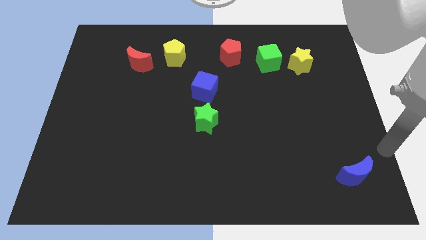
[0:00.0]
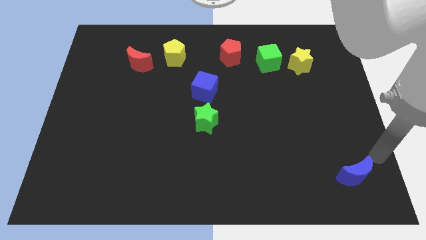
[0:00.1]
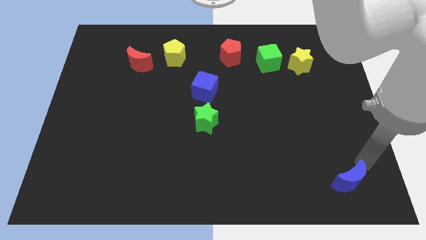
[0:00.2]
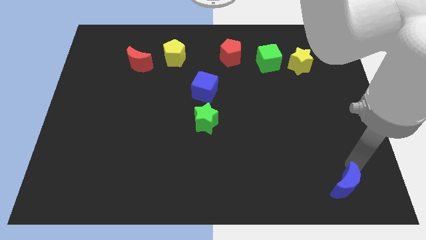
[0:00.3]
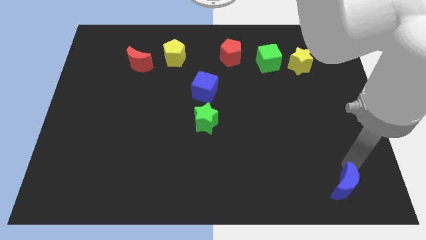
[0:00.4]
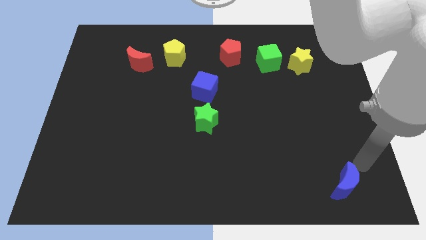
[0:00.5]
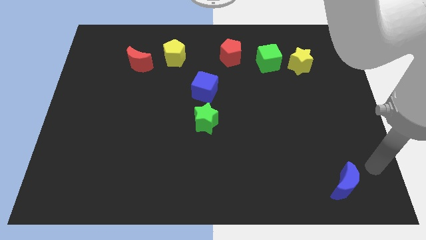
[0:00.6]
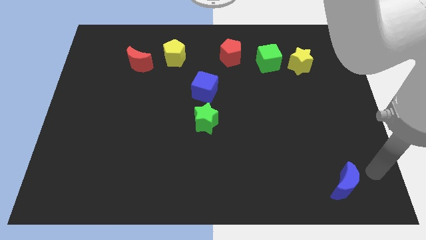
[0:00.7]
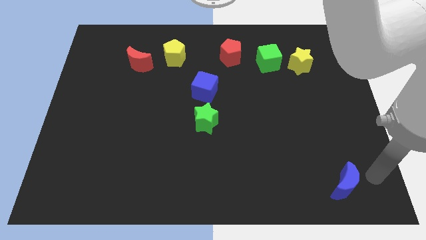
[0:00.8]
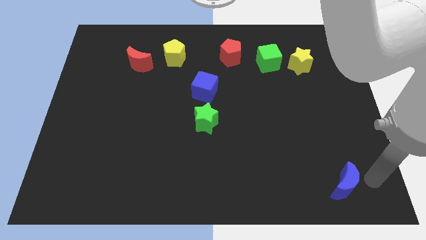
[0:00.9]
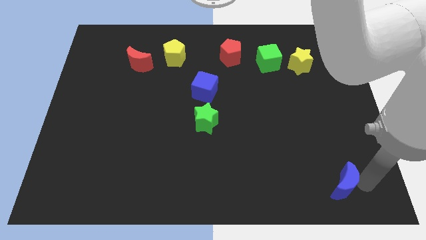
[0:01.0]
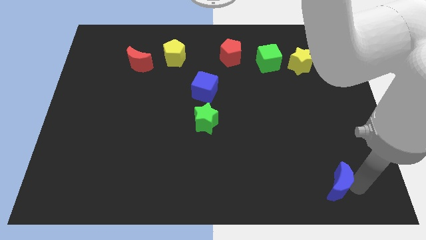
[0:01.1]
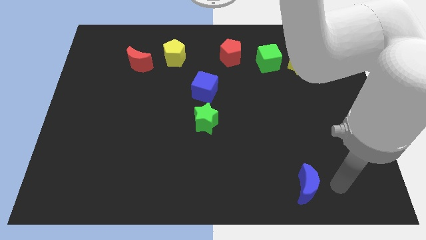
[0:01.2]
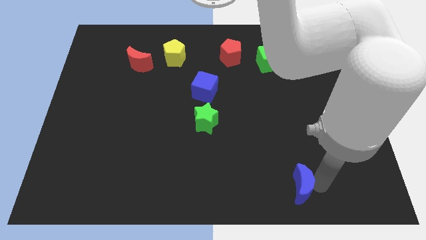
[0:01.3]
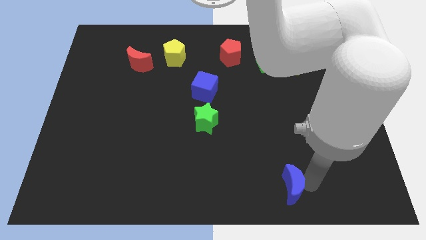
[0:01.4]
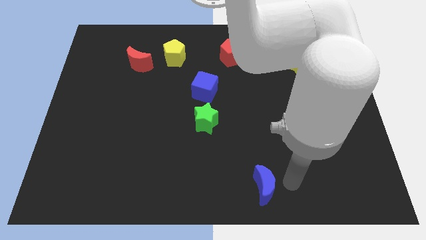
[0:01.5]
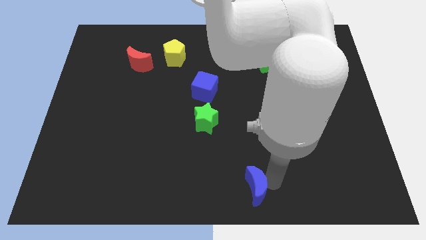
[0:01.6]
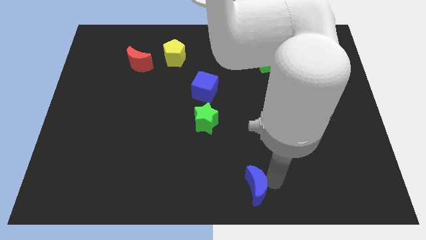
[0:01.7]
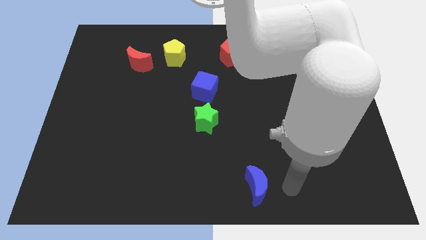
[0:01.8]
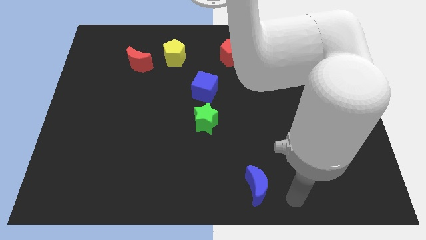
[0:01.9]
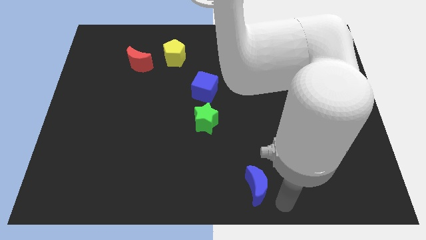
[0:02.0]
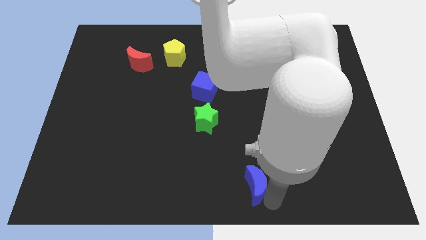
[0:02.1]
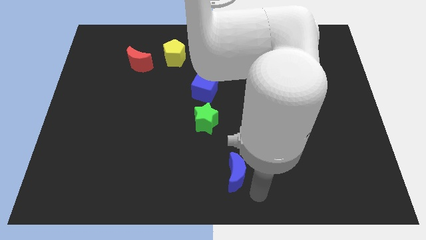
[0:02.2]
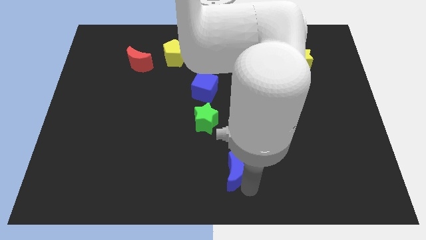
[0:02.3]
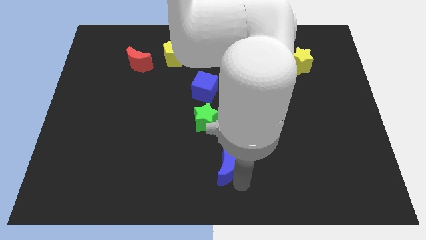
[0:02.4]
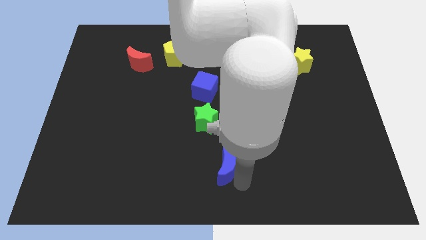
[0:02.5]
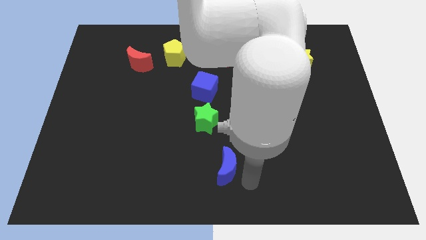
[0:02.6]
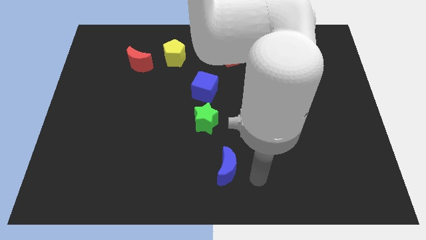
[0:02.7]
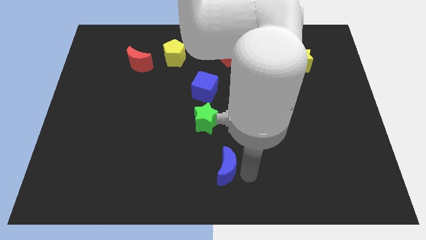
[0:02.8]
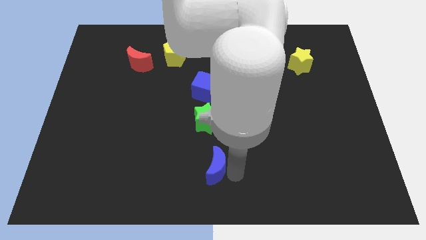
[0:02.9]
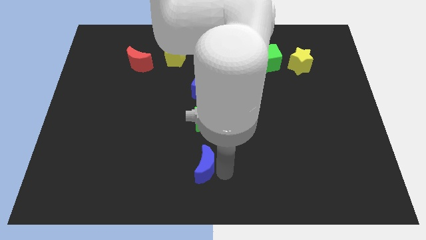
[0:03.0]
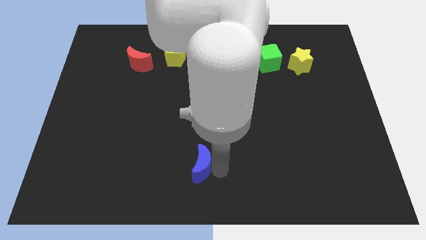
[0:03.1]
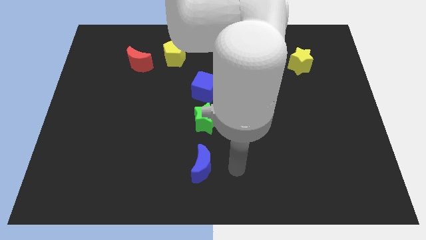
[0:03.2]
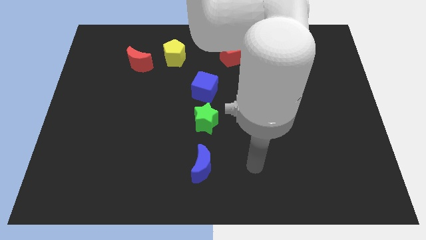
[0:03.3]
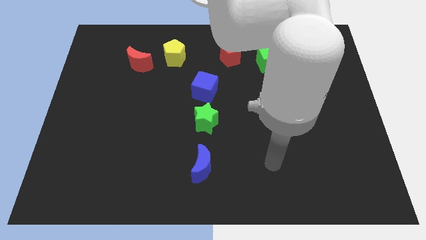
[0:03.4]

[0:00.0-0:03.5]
place the blue moon below the green star

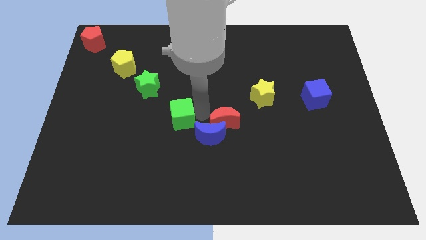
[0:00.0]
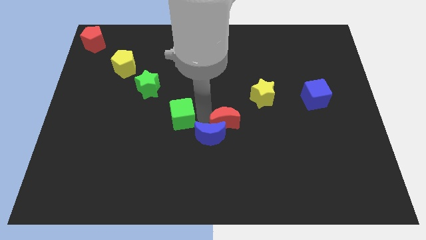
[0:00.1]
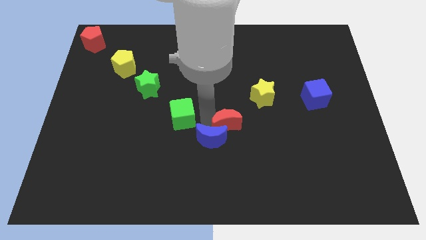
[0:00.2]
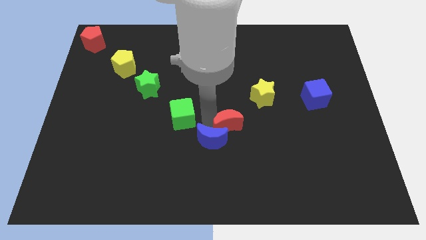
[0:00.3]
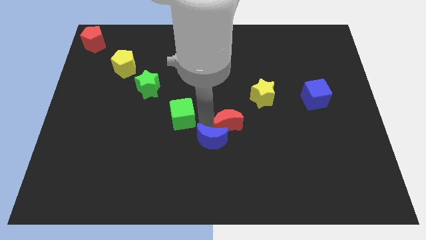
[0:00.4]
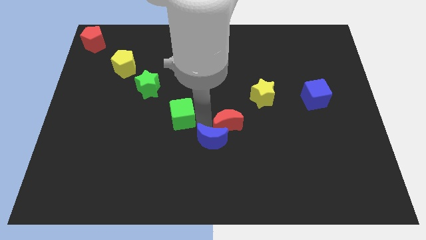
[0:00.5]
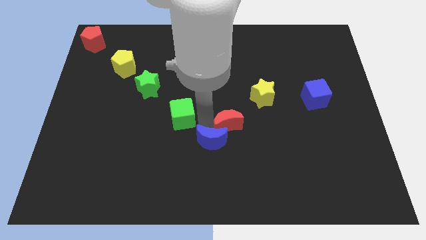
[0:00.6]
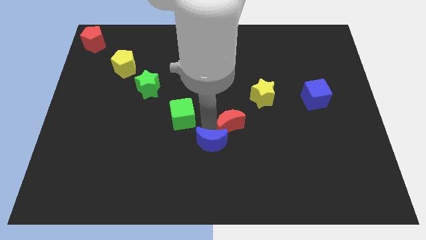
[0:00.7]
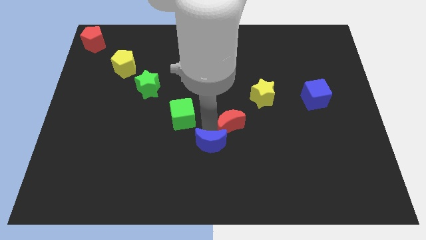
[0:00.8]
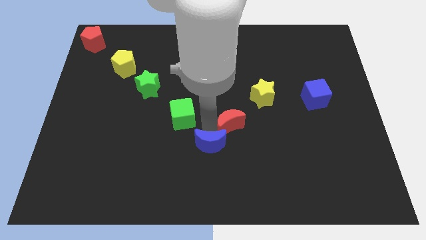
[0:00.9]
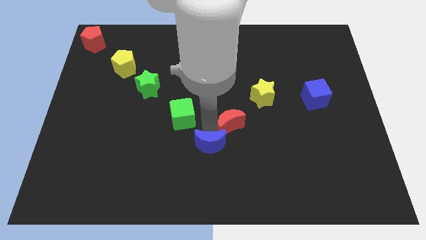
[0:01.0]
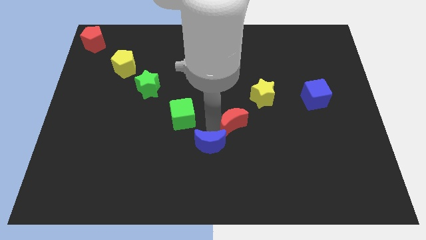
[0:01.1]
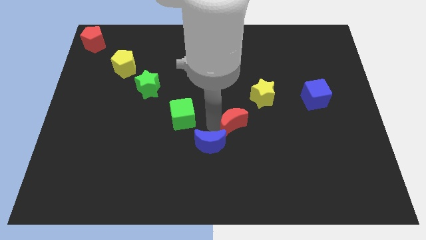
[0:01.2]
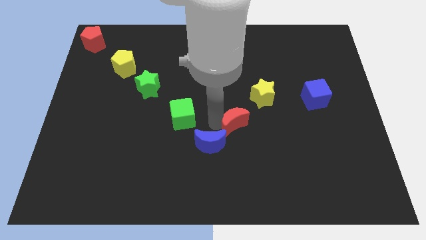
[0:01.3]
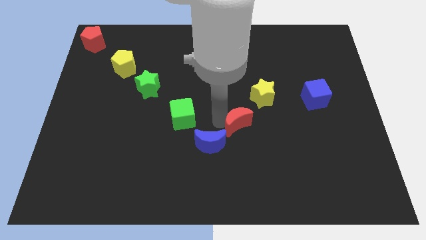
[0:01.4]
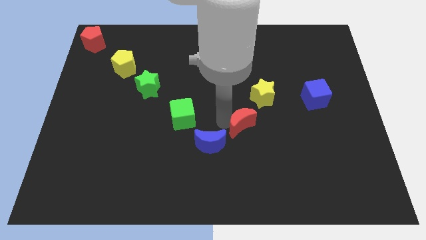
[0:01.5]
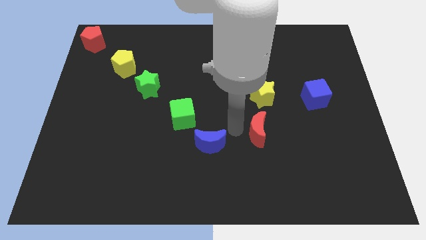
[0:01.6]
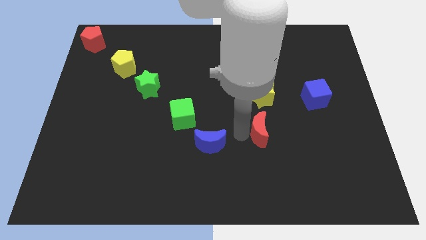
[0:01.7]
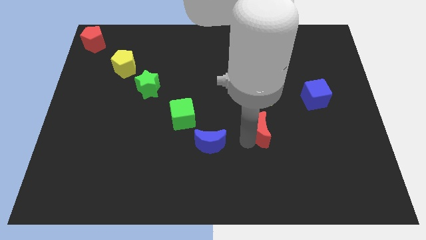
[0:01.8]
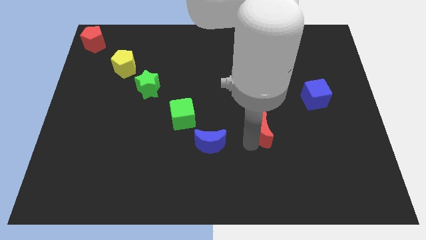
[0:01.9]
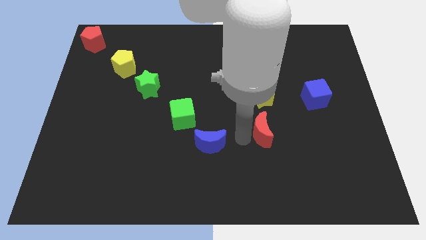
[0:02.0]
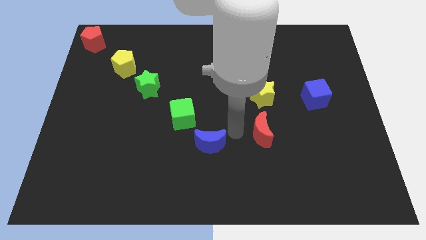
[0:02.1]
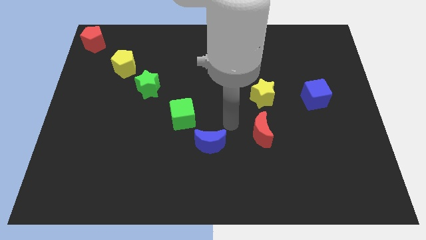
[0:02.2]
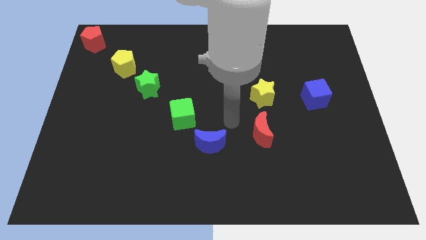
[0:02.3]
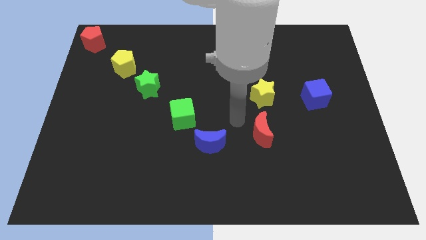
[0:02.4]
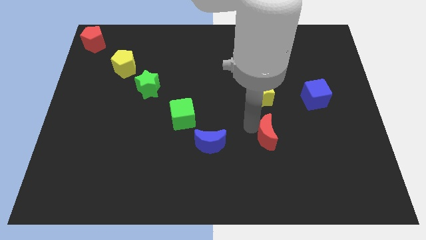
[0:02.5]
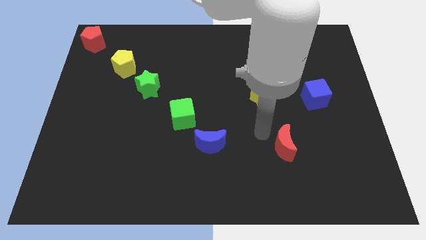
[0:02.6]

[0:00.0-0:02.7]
move the red crescent to the bottom of the yellow star

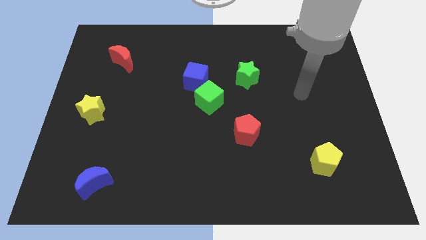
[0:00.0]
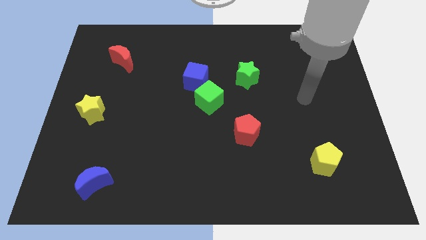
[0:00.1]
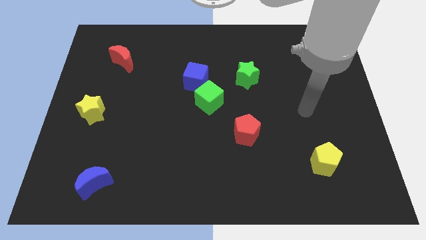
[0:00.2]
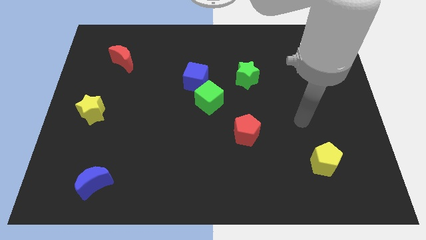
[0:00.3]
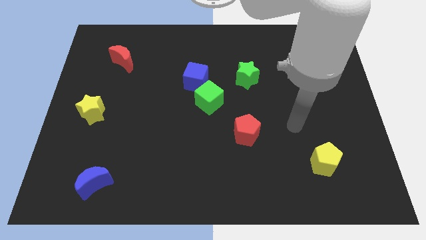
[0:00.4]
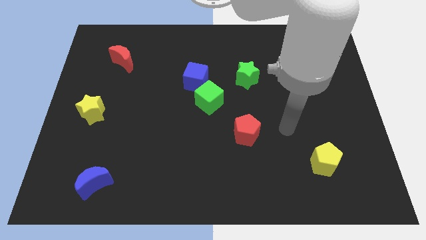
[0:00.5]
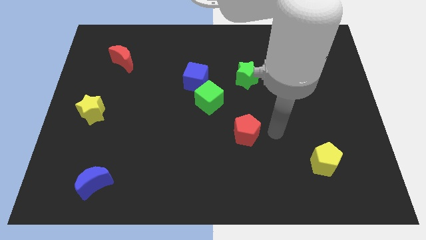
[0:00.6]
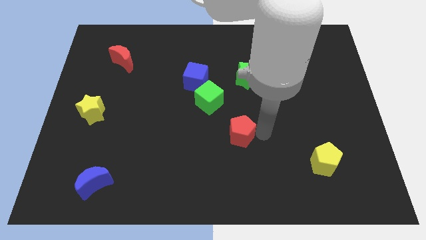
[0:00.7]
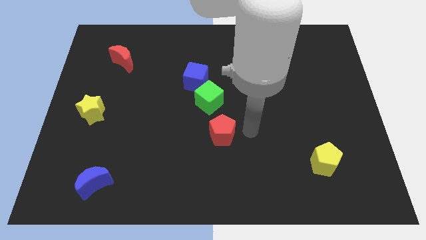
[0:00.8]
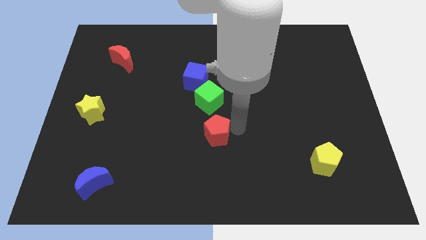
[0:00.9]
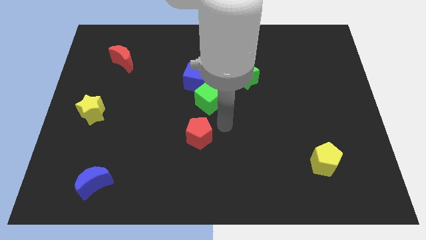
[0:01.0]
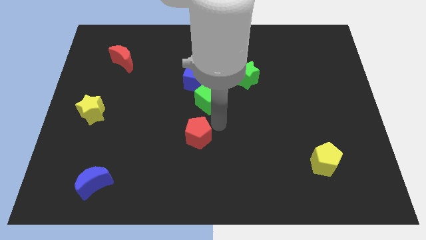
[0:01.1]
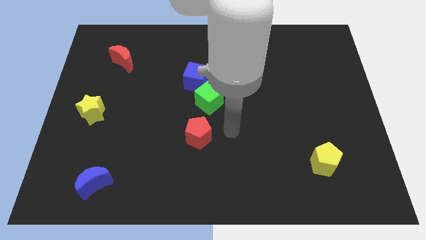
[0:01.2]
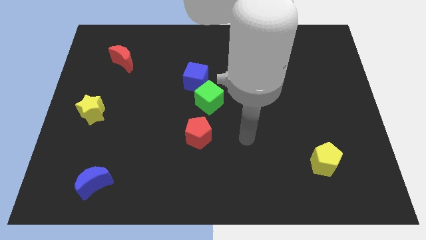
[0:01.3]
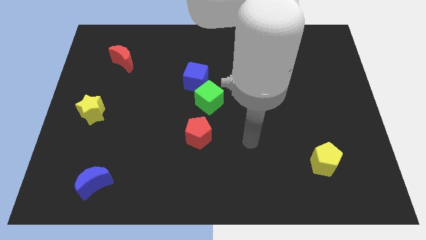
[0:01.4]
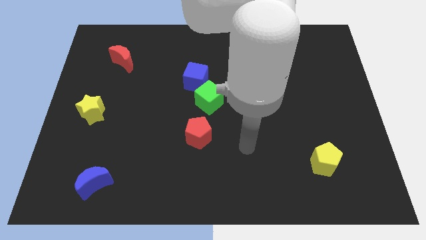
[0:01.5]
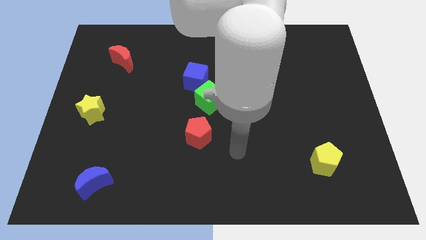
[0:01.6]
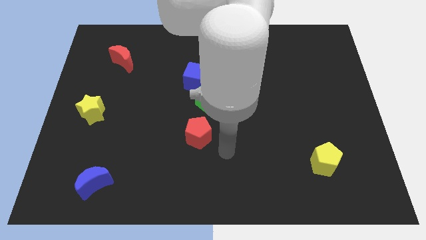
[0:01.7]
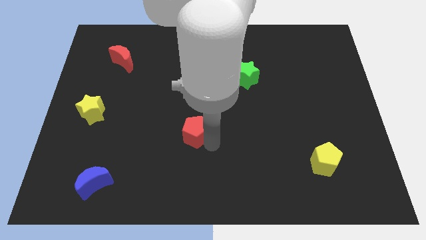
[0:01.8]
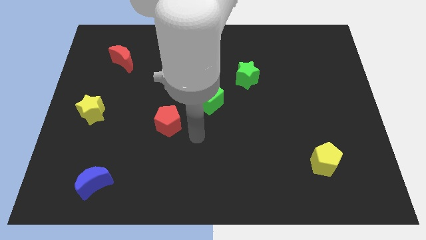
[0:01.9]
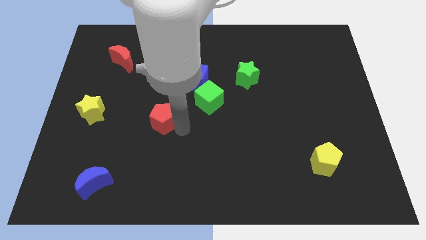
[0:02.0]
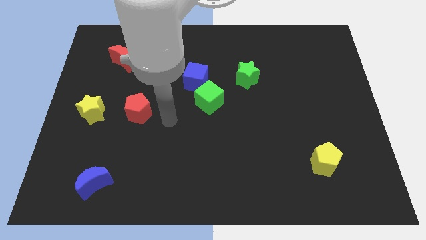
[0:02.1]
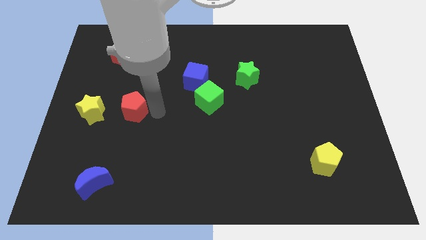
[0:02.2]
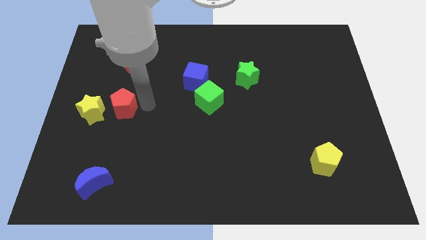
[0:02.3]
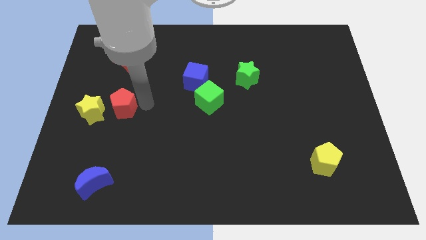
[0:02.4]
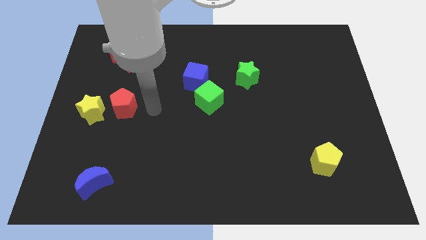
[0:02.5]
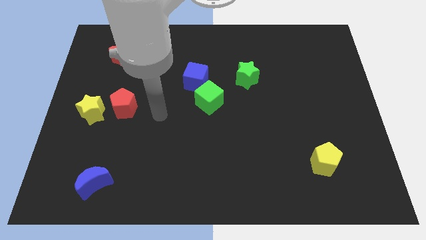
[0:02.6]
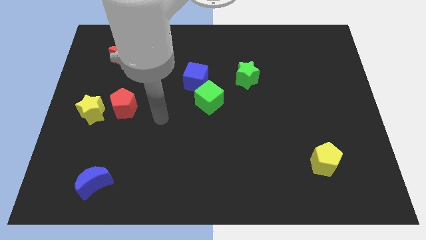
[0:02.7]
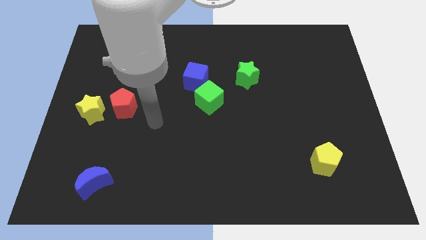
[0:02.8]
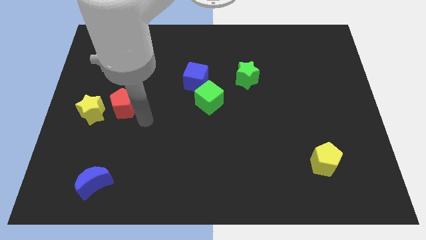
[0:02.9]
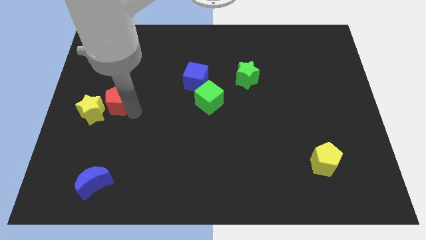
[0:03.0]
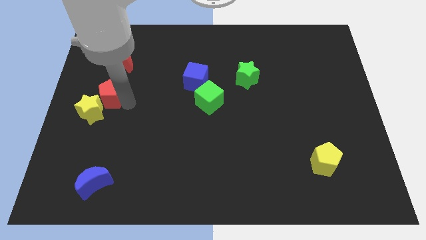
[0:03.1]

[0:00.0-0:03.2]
move the red pentagon to the right side of the yellow star
